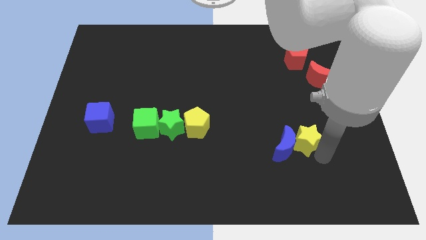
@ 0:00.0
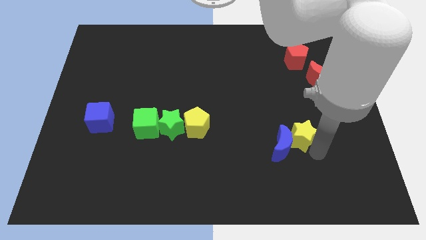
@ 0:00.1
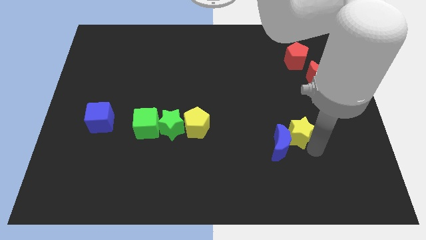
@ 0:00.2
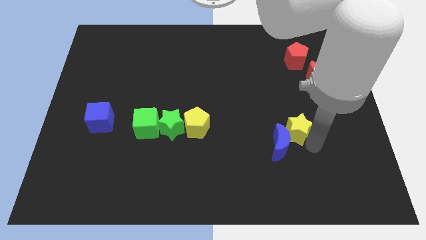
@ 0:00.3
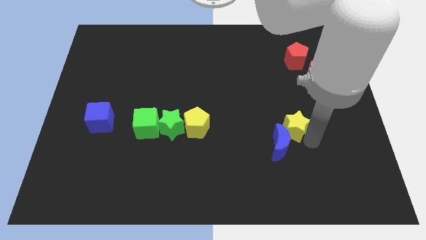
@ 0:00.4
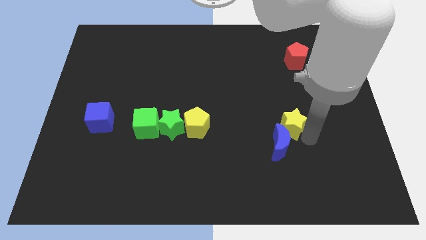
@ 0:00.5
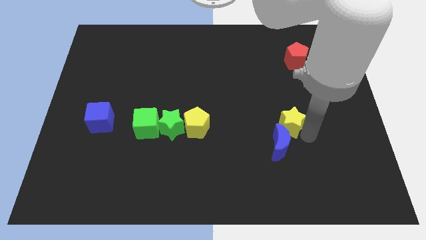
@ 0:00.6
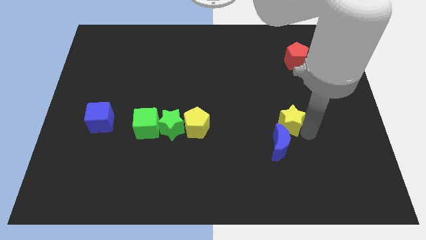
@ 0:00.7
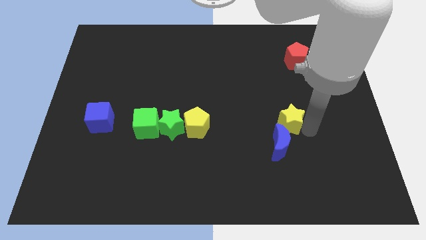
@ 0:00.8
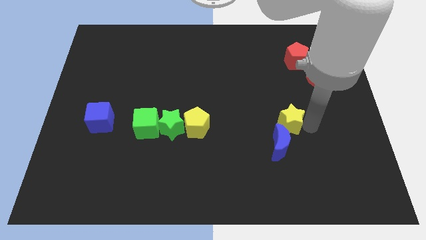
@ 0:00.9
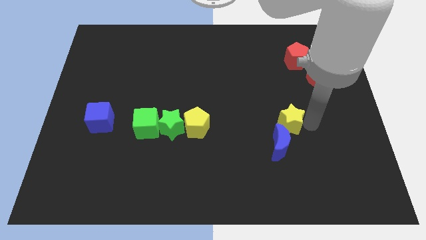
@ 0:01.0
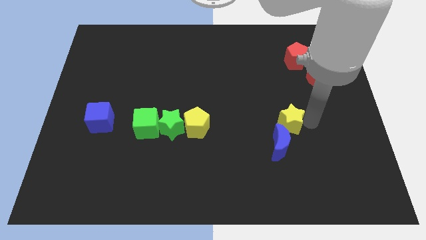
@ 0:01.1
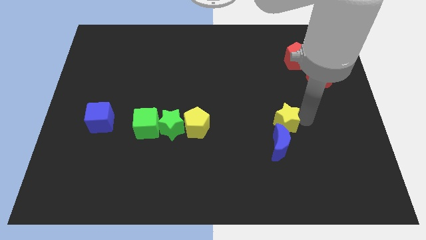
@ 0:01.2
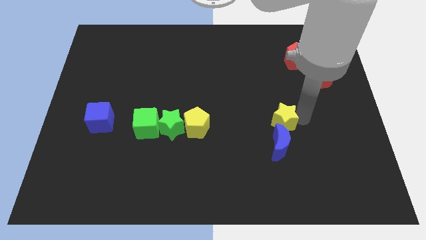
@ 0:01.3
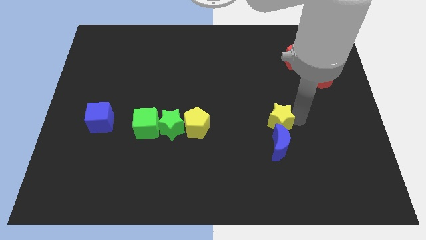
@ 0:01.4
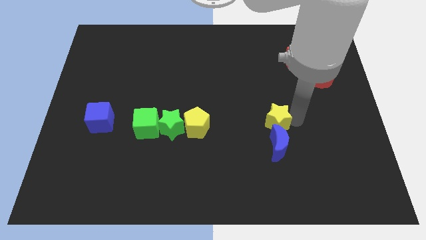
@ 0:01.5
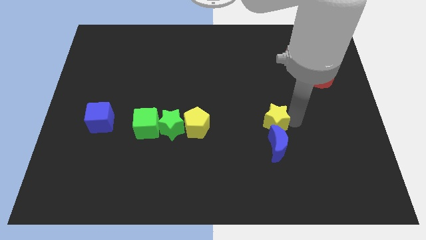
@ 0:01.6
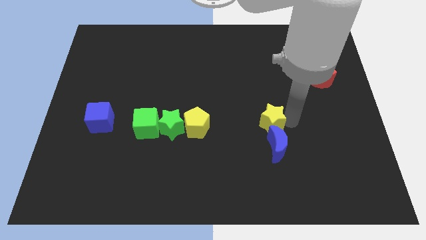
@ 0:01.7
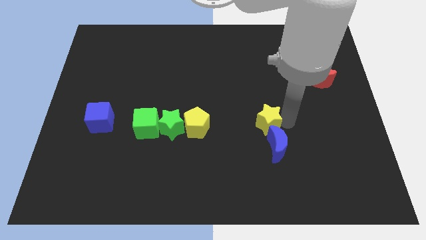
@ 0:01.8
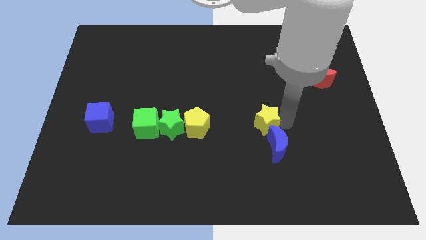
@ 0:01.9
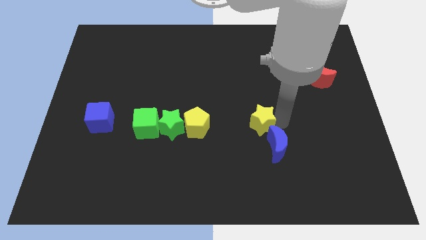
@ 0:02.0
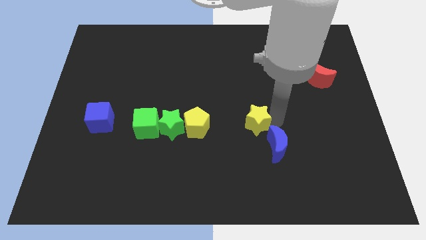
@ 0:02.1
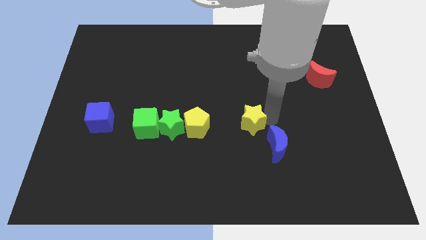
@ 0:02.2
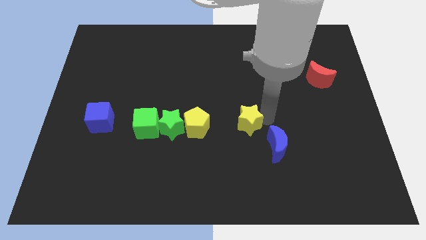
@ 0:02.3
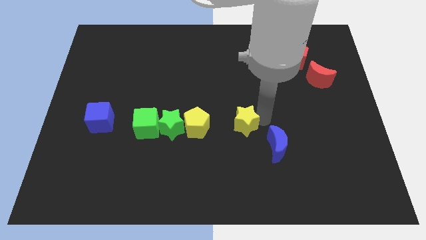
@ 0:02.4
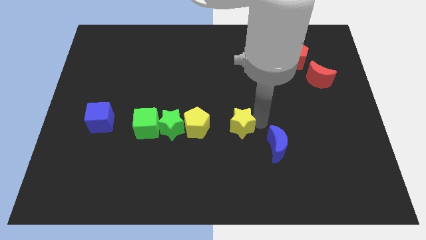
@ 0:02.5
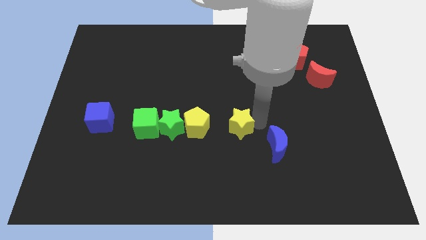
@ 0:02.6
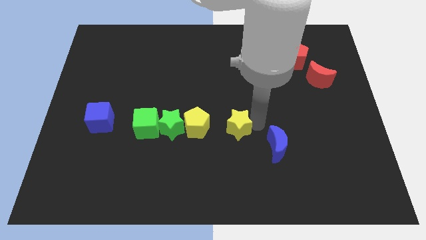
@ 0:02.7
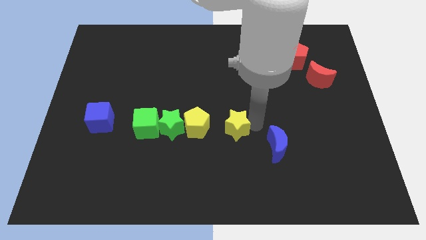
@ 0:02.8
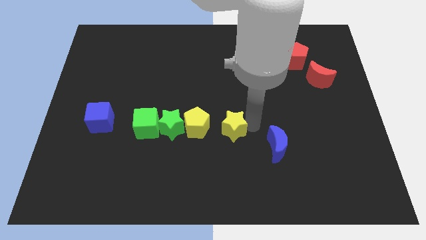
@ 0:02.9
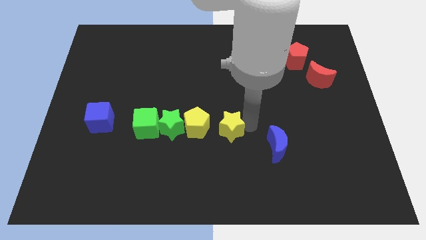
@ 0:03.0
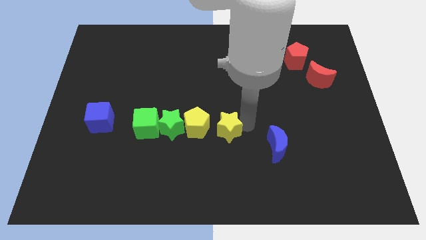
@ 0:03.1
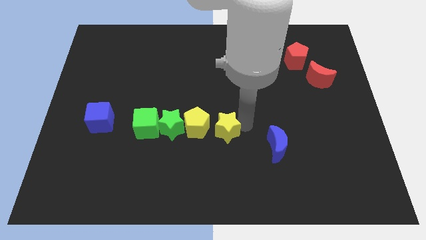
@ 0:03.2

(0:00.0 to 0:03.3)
separate yellow star and the blue moon

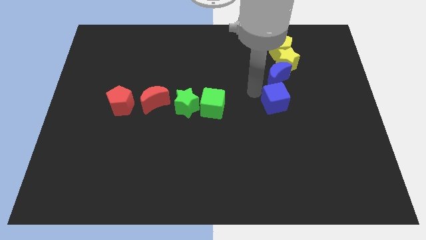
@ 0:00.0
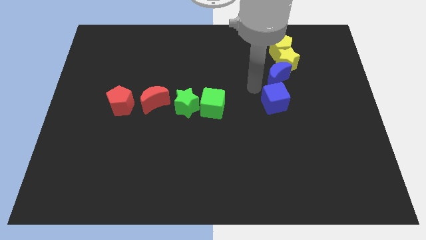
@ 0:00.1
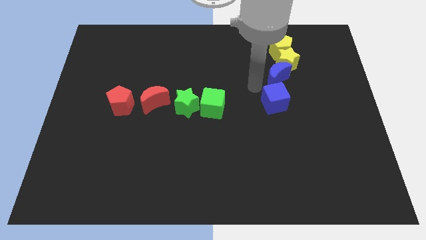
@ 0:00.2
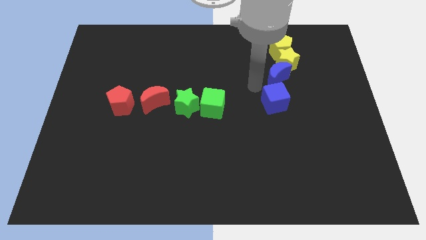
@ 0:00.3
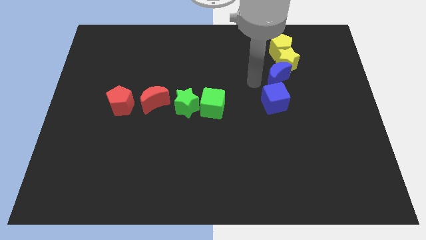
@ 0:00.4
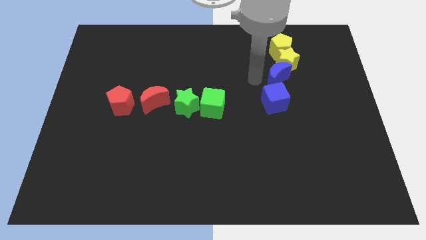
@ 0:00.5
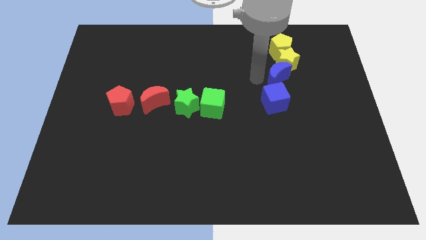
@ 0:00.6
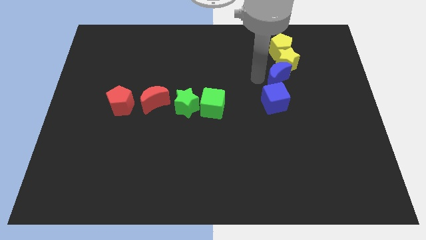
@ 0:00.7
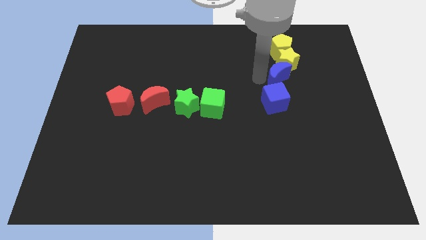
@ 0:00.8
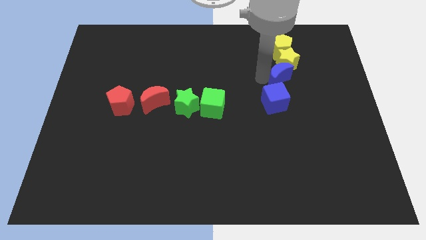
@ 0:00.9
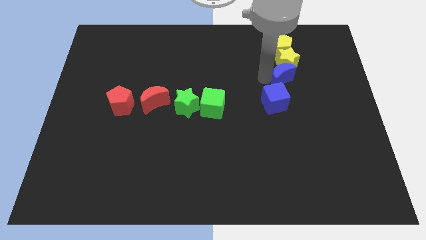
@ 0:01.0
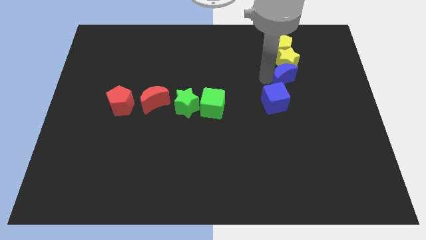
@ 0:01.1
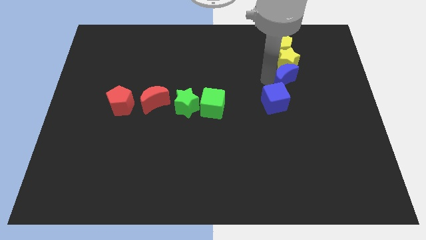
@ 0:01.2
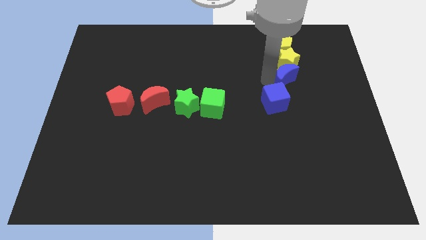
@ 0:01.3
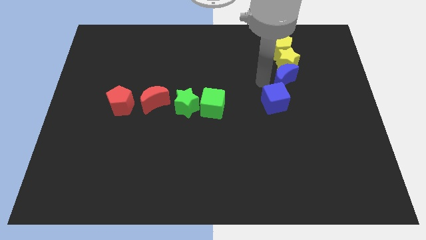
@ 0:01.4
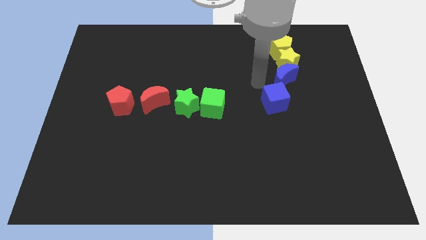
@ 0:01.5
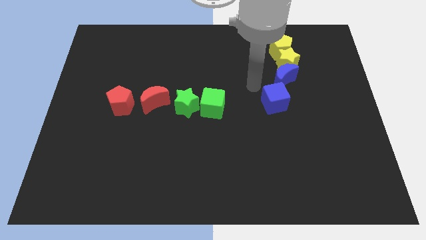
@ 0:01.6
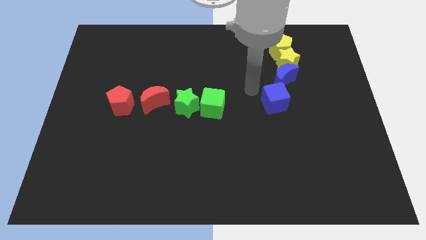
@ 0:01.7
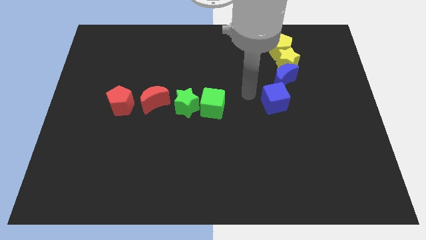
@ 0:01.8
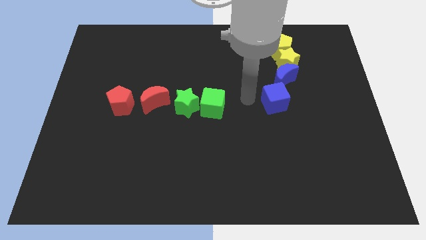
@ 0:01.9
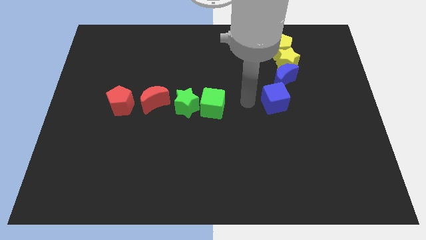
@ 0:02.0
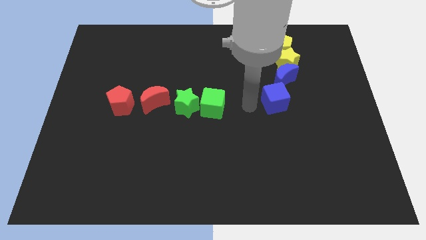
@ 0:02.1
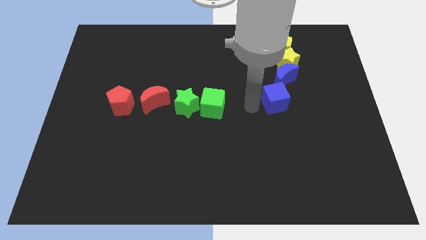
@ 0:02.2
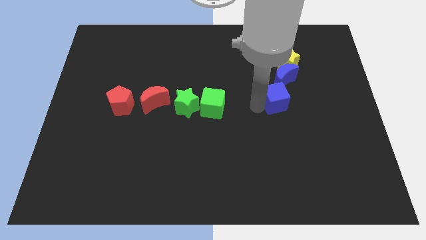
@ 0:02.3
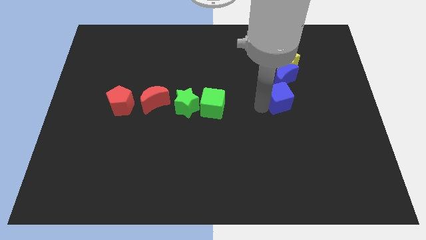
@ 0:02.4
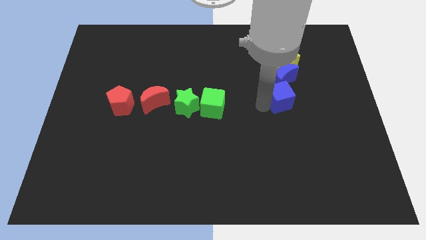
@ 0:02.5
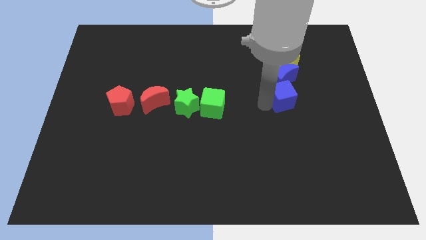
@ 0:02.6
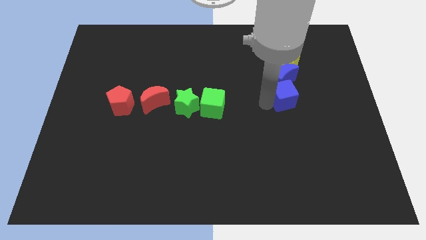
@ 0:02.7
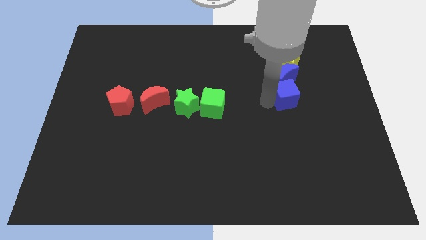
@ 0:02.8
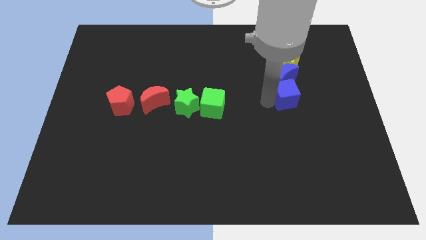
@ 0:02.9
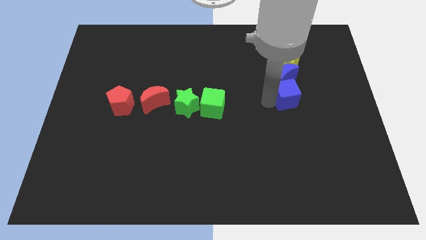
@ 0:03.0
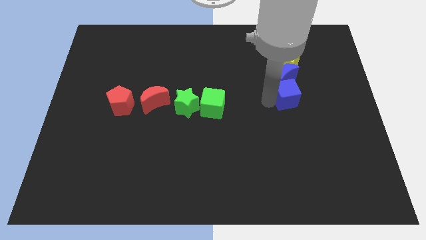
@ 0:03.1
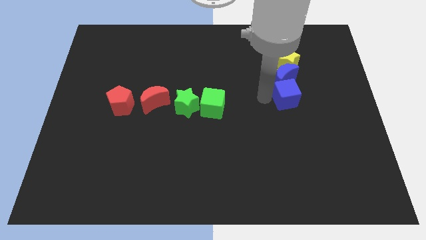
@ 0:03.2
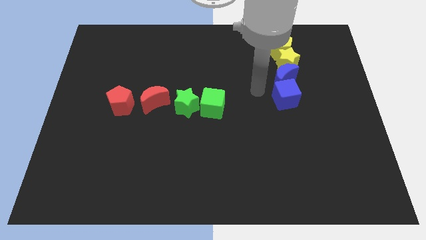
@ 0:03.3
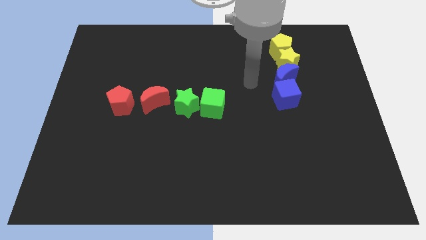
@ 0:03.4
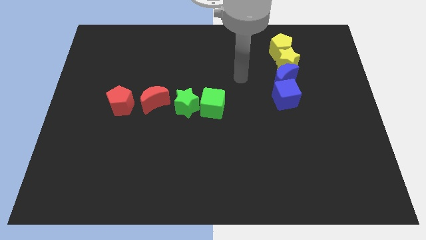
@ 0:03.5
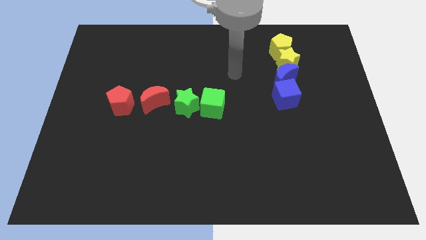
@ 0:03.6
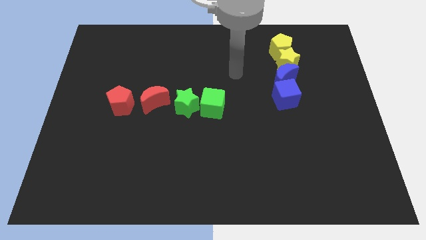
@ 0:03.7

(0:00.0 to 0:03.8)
move the blue blocks to form the vertical line below the yellow star

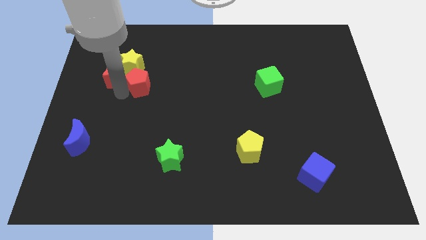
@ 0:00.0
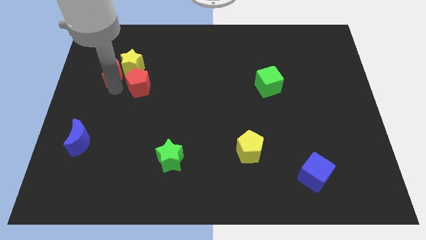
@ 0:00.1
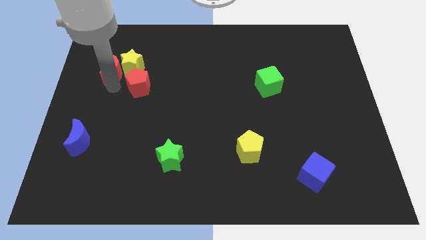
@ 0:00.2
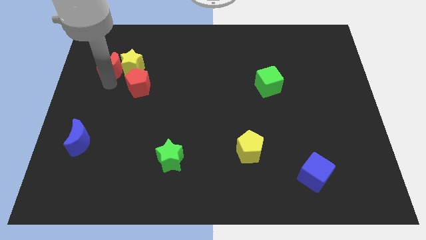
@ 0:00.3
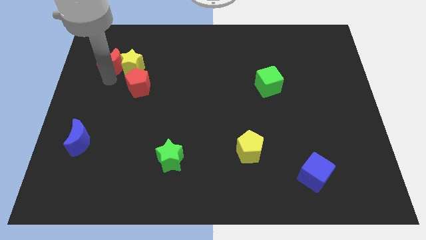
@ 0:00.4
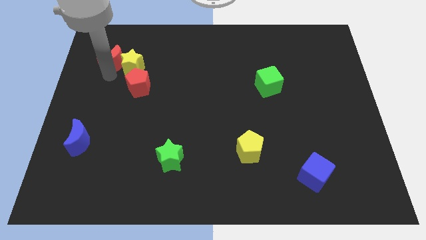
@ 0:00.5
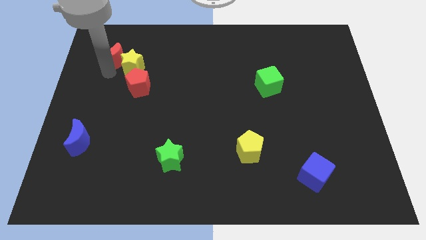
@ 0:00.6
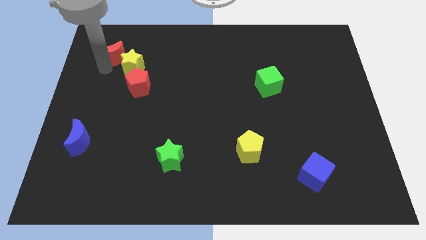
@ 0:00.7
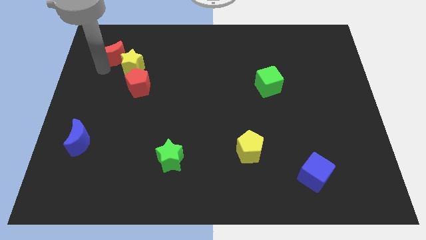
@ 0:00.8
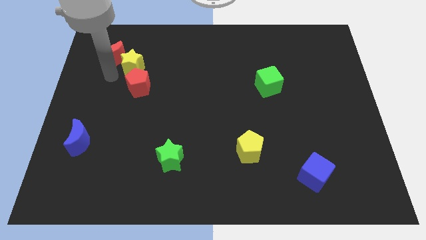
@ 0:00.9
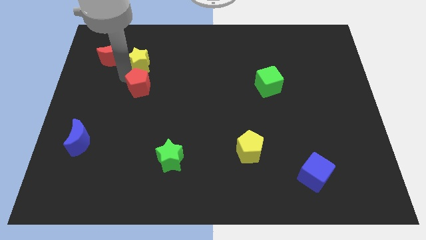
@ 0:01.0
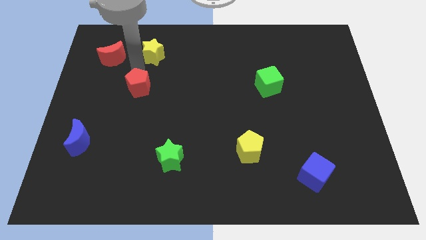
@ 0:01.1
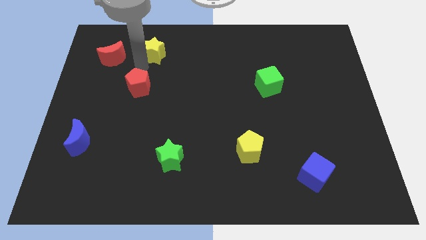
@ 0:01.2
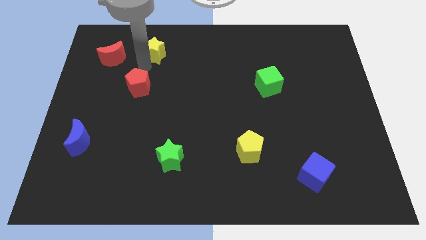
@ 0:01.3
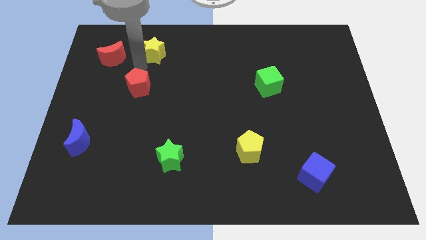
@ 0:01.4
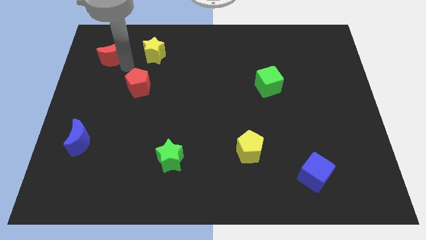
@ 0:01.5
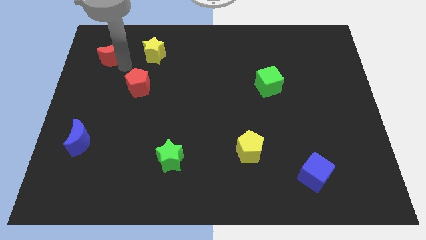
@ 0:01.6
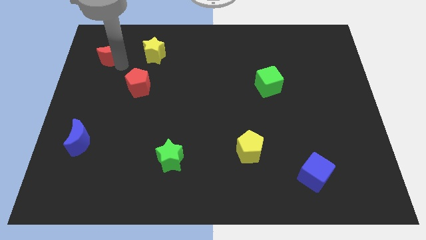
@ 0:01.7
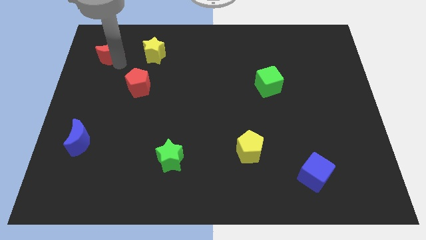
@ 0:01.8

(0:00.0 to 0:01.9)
separate the blocks from each other
